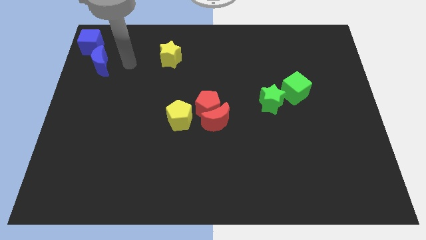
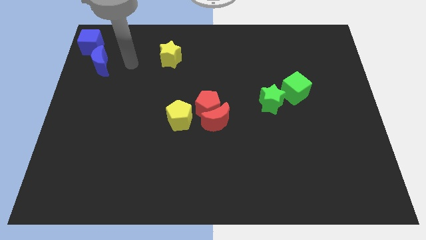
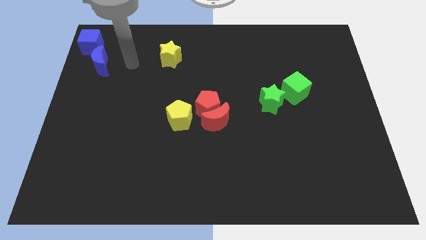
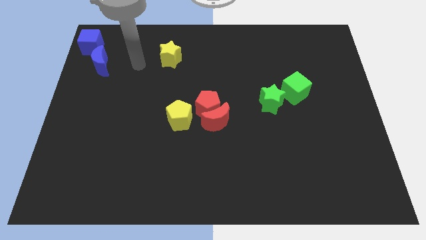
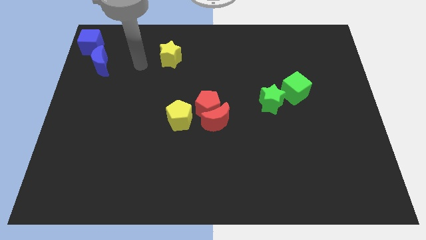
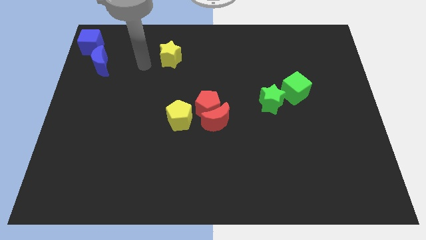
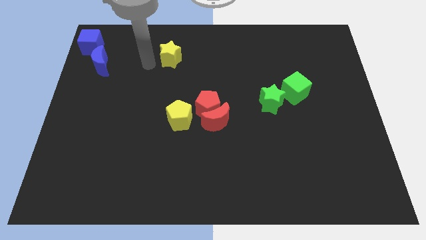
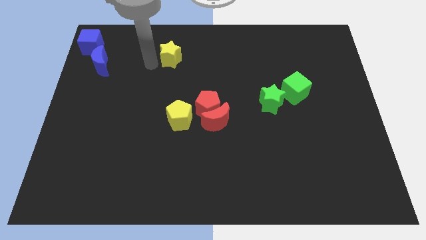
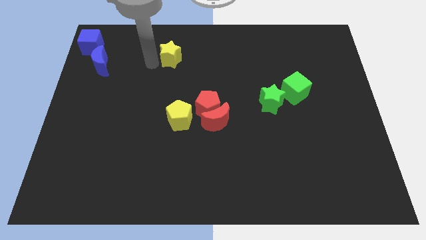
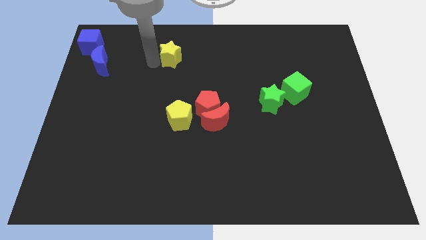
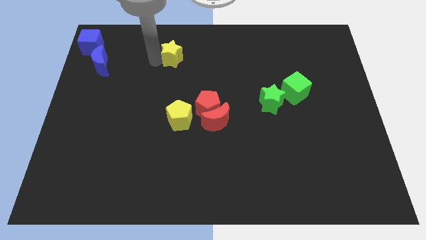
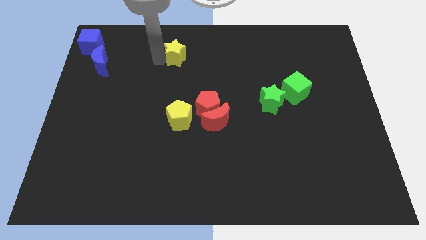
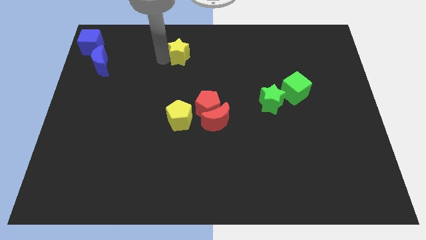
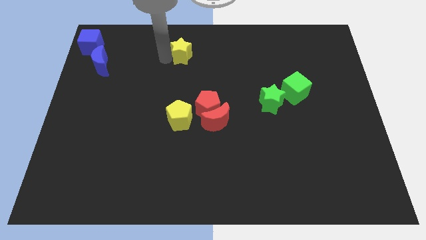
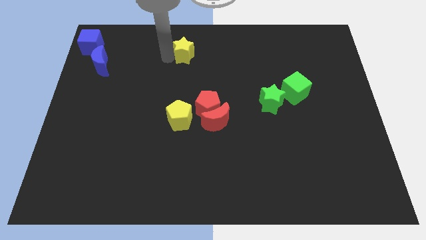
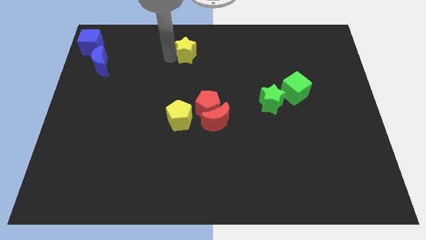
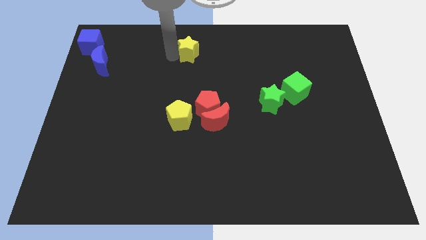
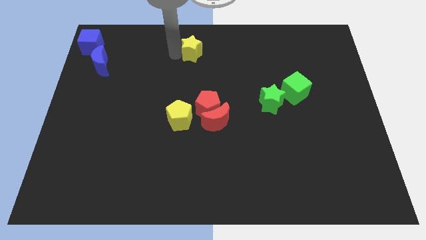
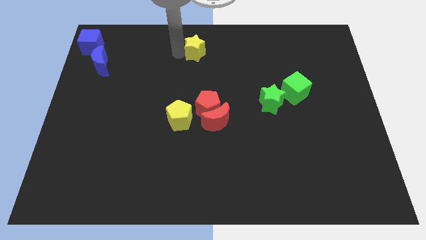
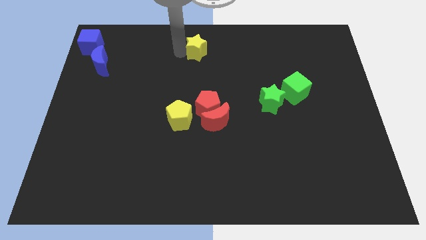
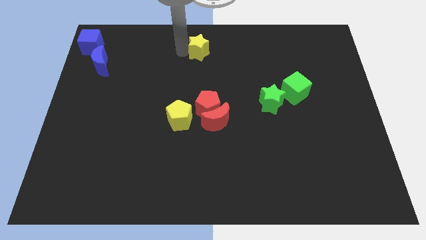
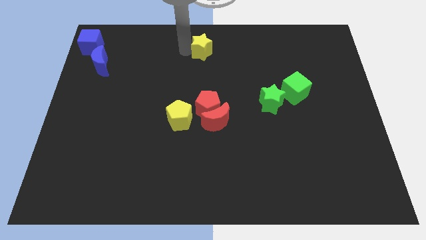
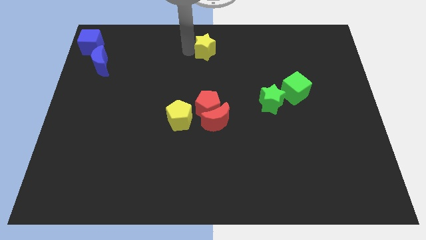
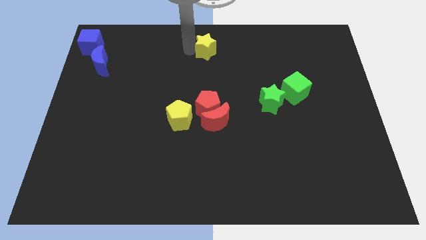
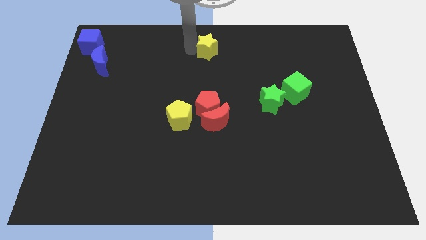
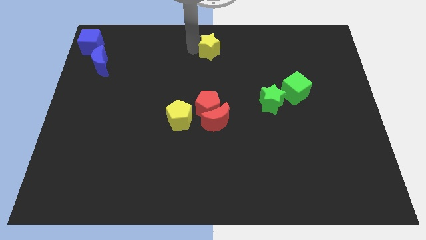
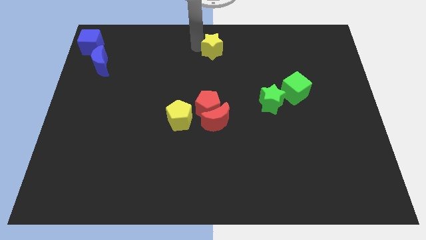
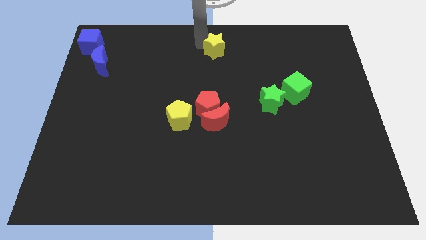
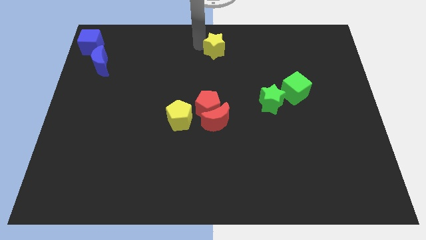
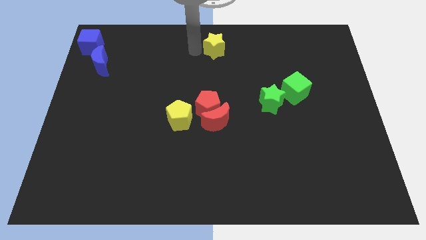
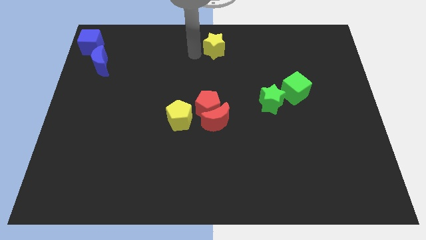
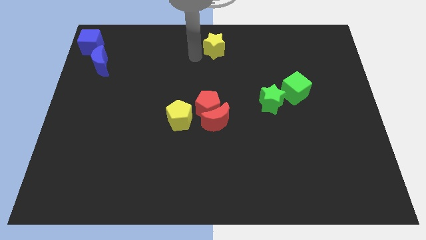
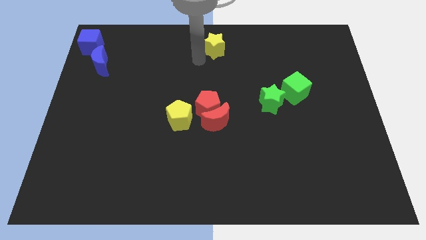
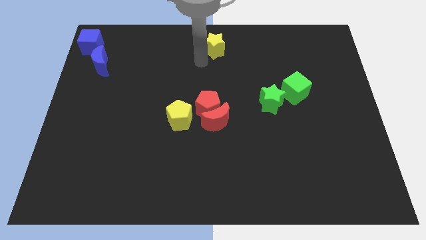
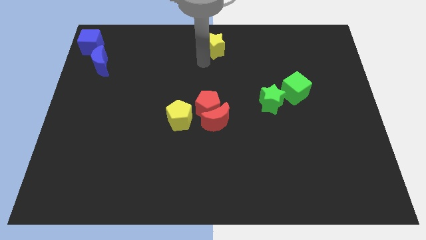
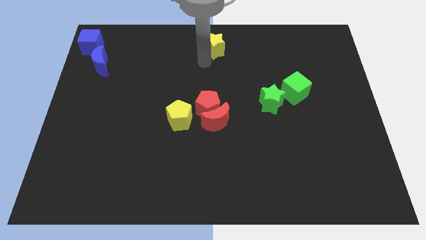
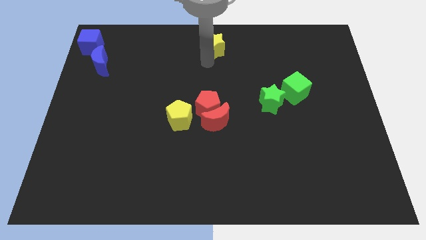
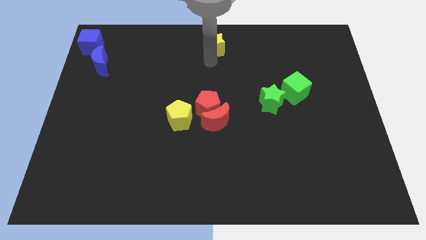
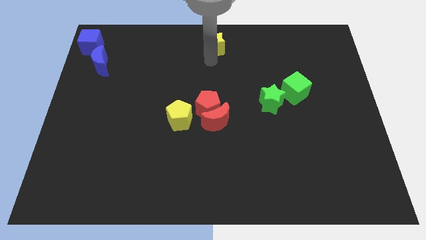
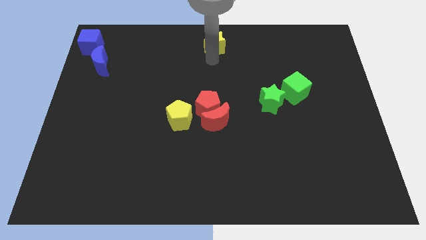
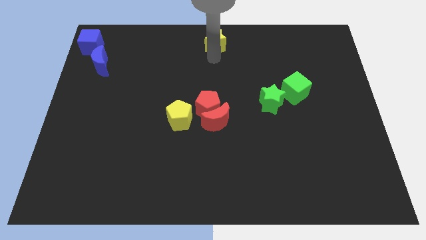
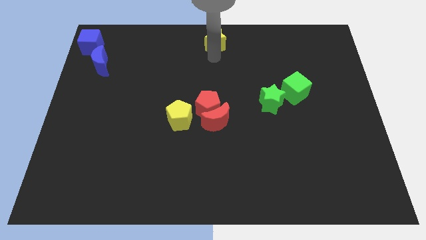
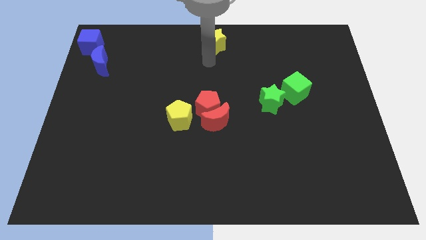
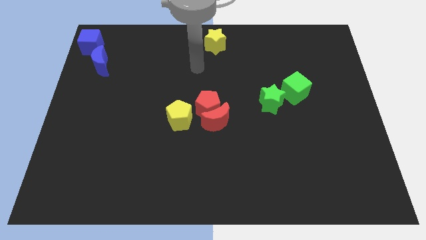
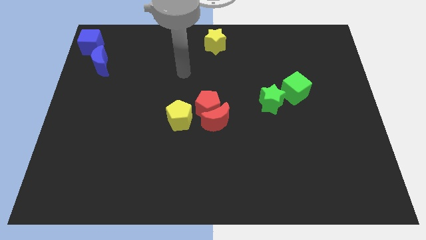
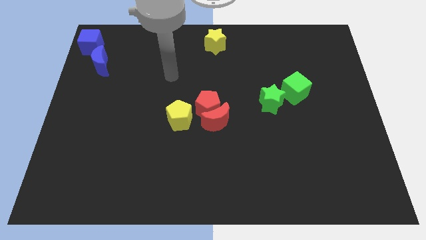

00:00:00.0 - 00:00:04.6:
slide the yellow star towards the top center of the board

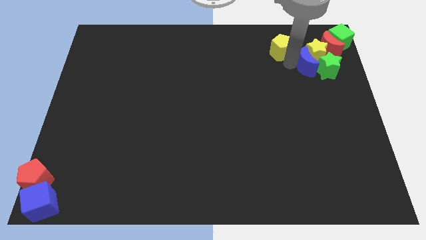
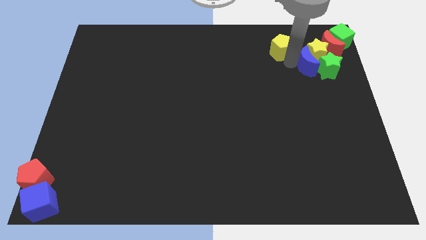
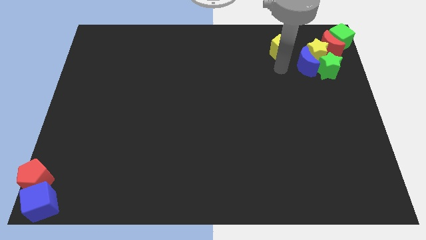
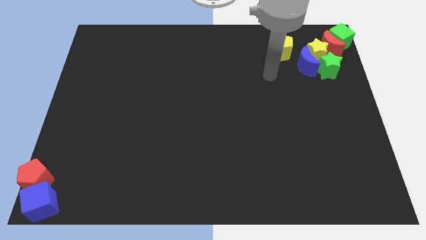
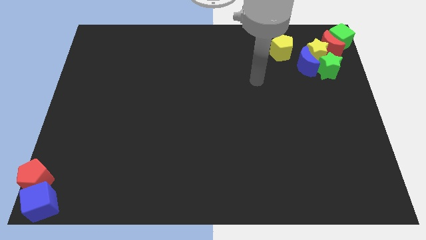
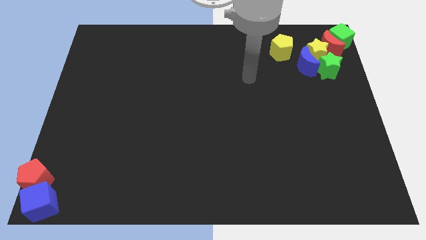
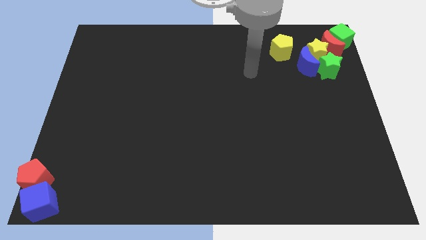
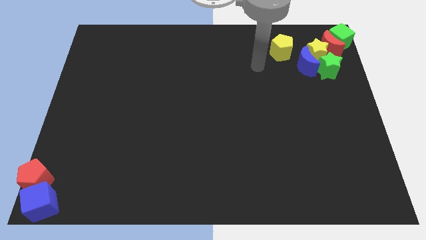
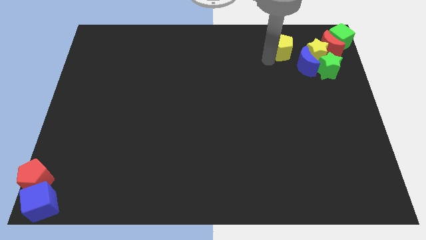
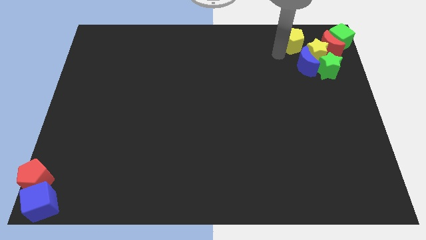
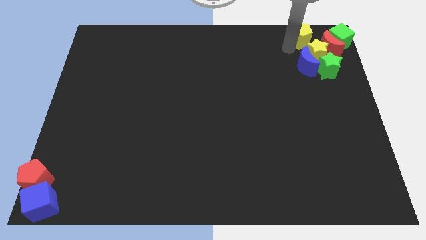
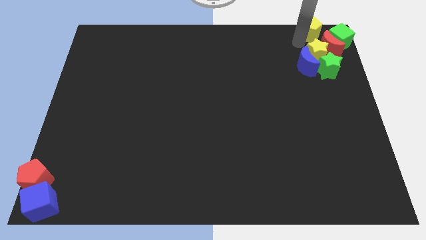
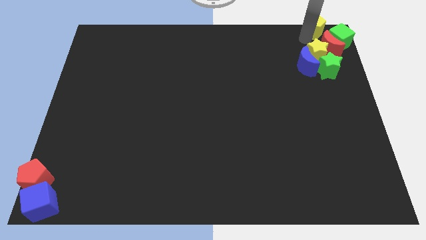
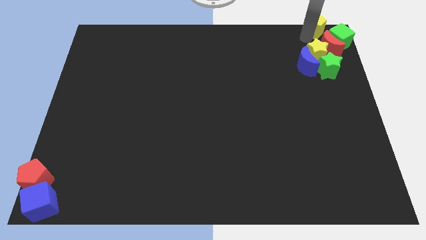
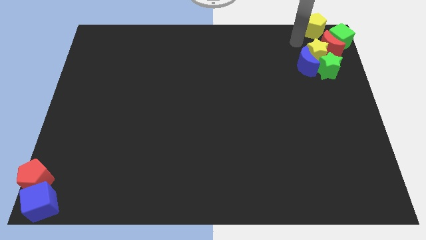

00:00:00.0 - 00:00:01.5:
place the yellow pentagon top right of the board

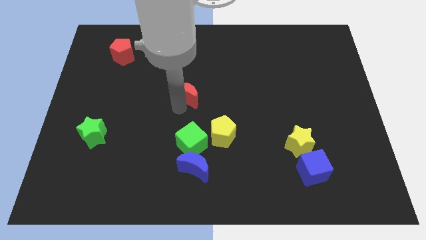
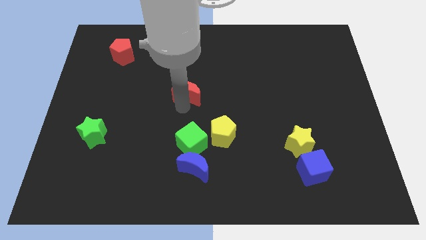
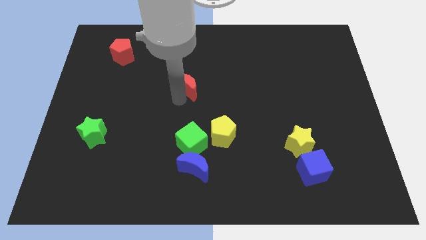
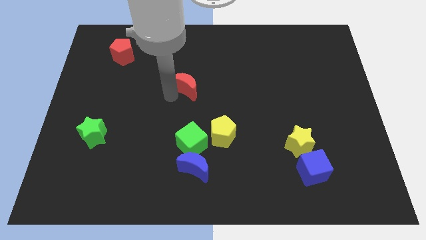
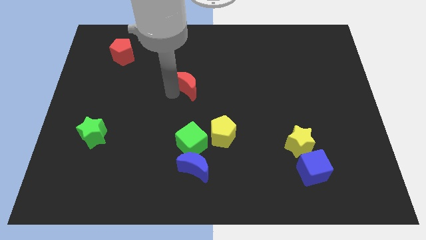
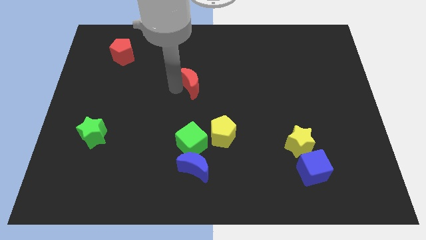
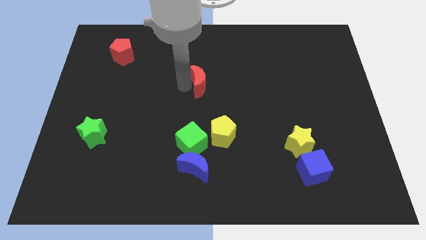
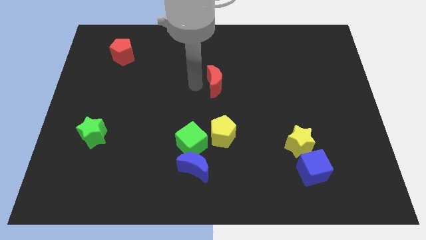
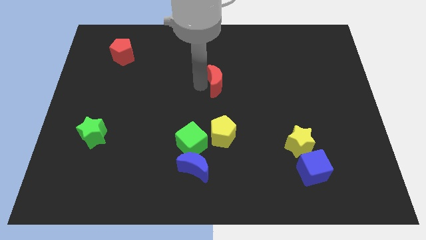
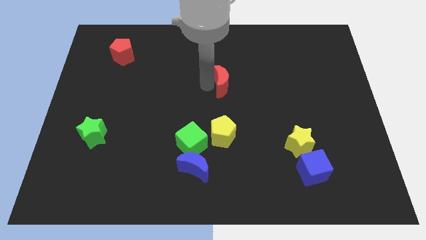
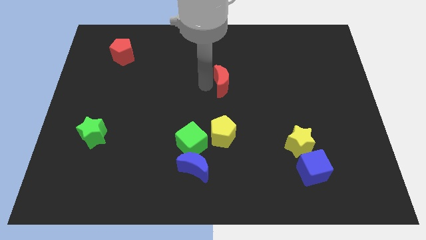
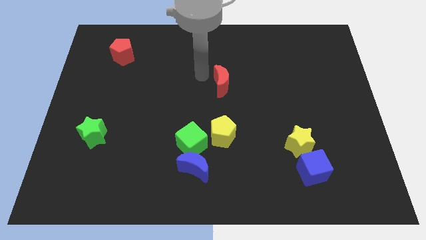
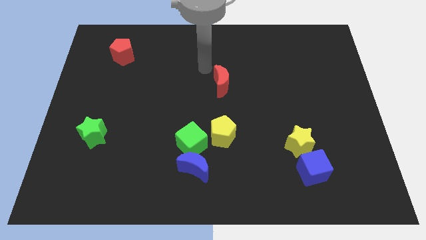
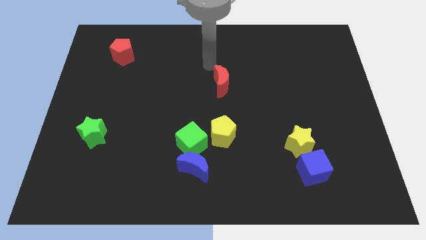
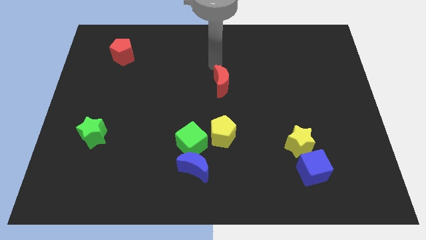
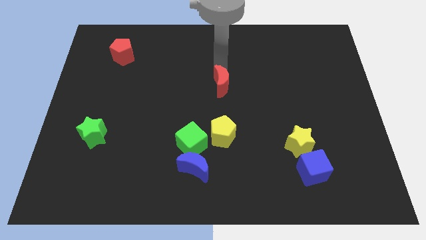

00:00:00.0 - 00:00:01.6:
place the red crescent vertically above the yellow pentagon

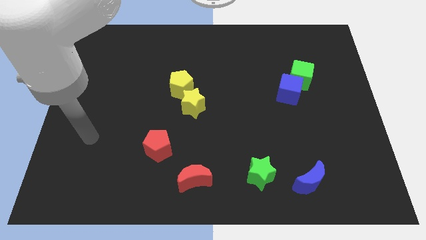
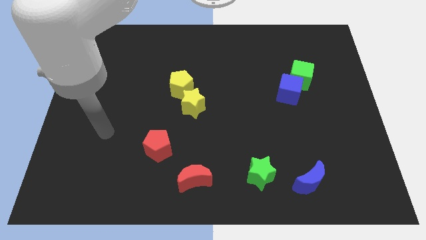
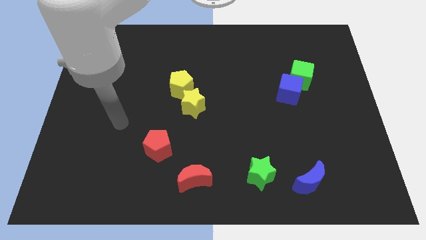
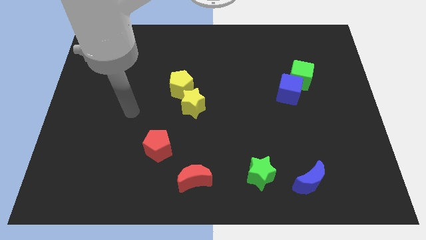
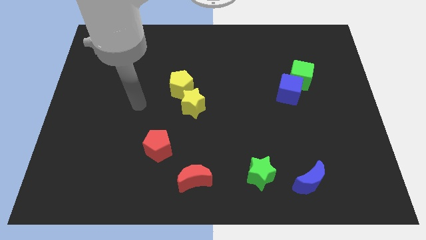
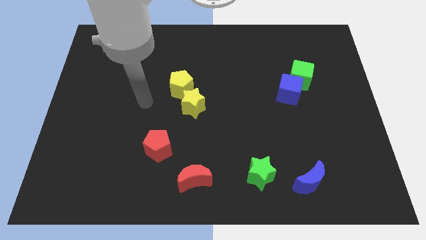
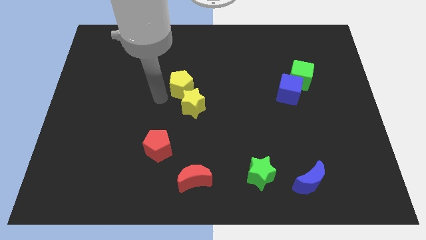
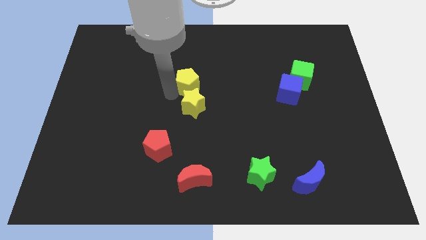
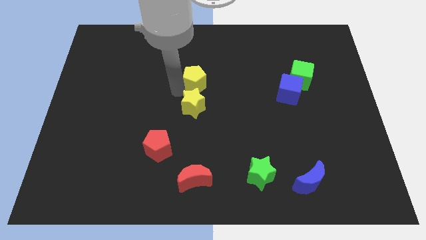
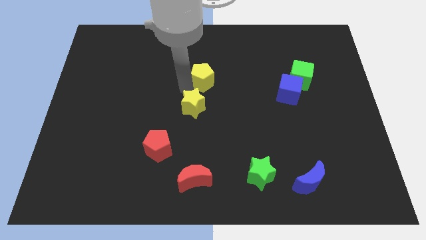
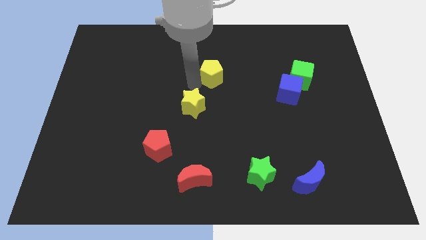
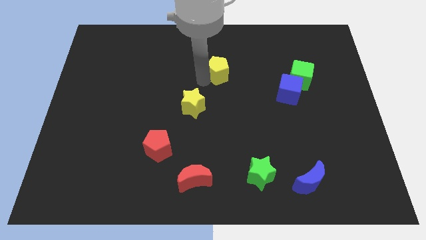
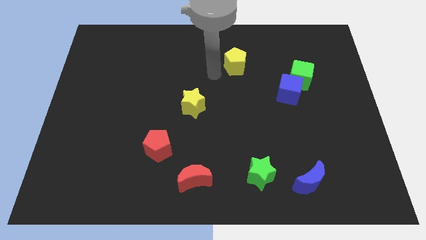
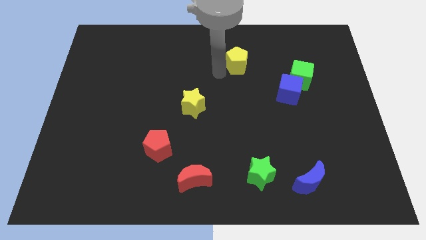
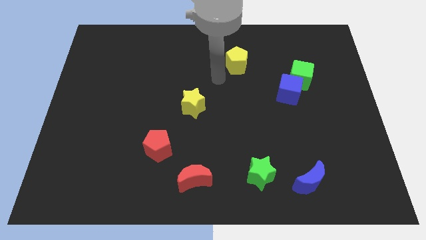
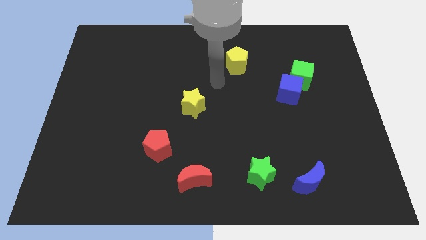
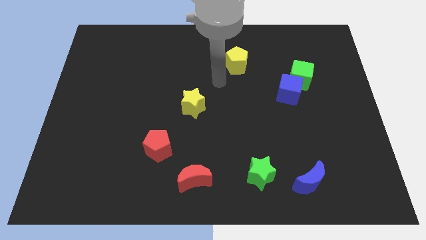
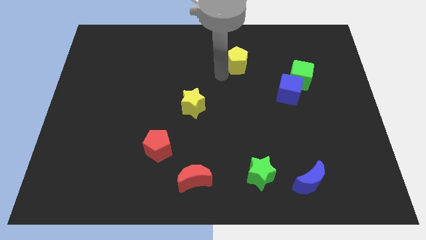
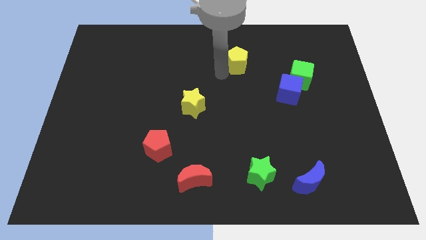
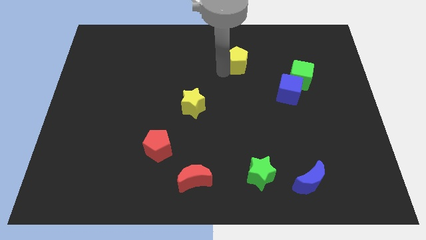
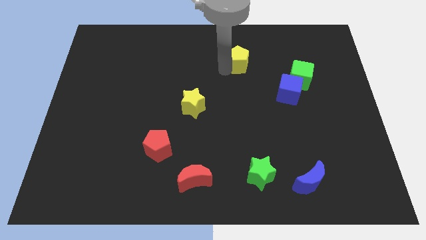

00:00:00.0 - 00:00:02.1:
separate yellow pentagon from yellow star
